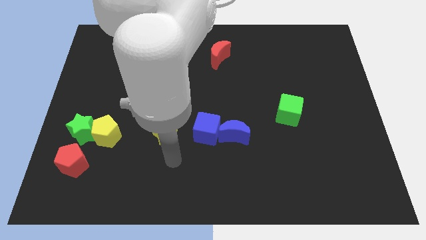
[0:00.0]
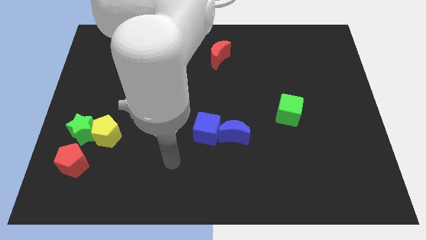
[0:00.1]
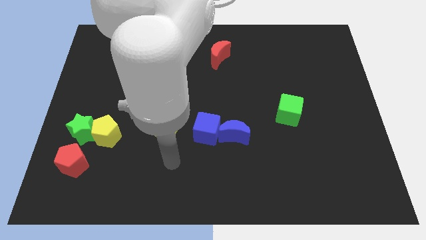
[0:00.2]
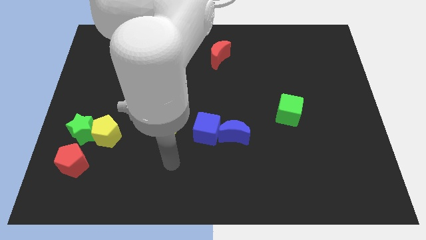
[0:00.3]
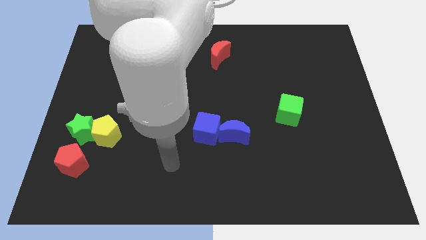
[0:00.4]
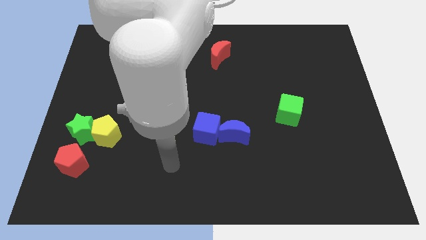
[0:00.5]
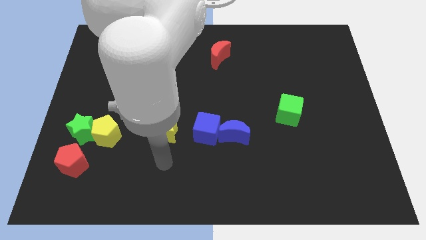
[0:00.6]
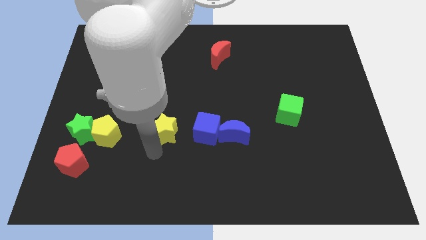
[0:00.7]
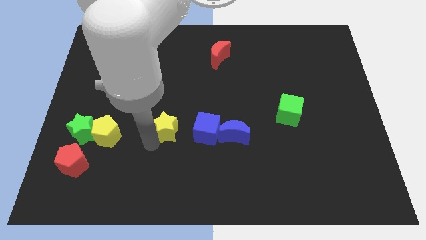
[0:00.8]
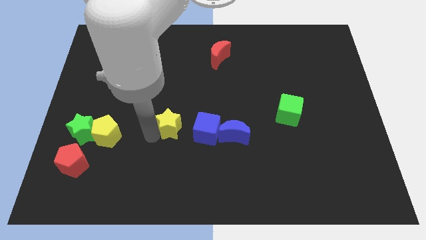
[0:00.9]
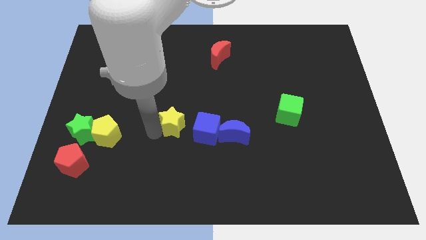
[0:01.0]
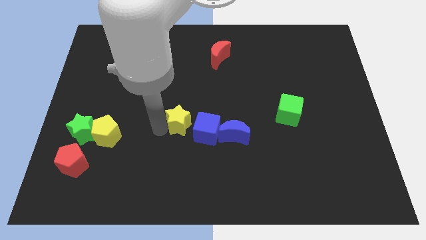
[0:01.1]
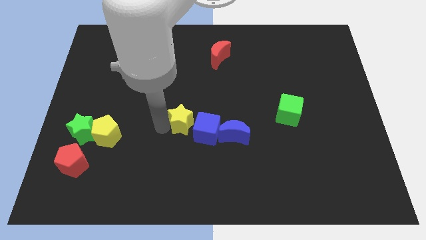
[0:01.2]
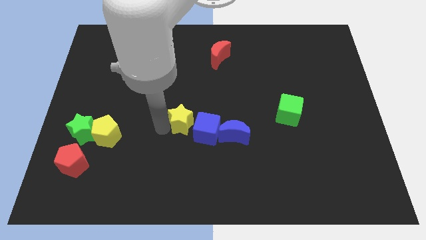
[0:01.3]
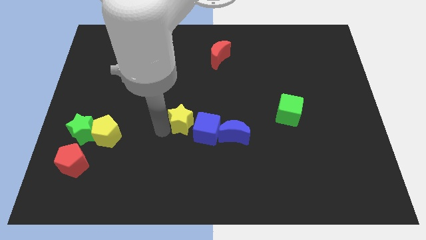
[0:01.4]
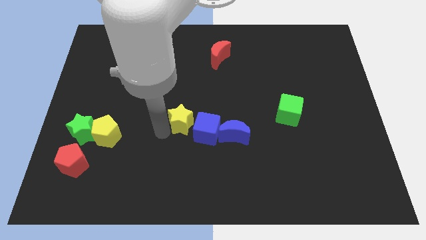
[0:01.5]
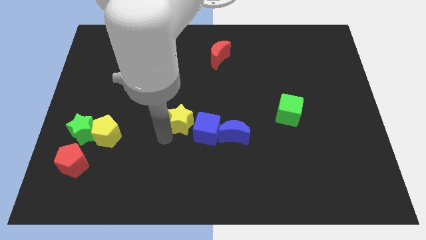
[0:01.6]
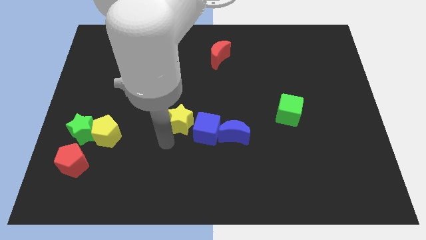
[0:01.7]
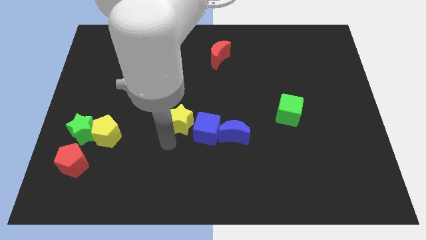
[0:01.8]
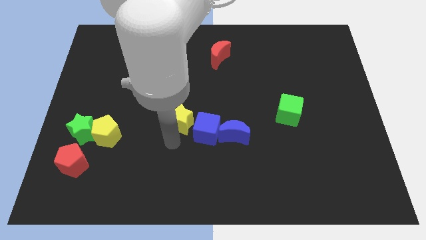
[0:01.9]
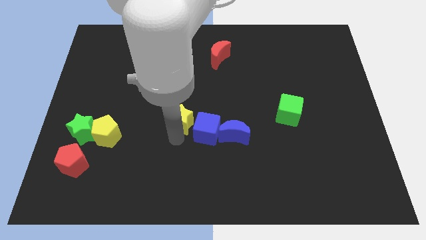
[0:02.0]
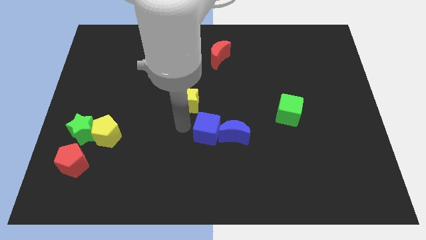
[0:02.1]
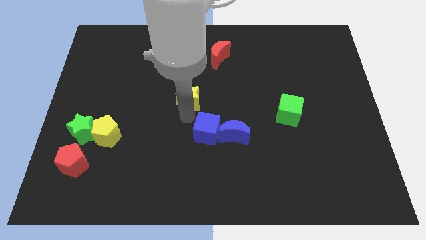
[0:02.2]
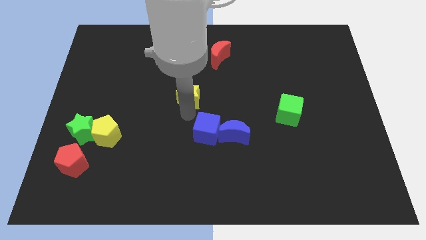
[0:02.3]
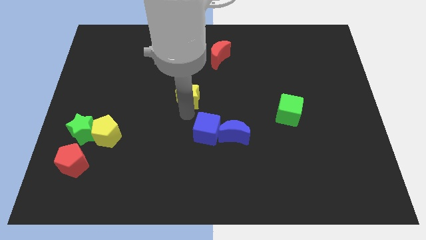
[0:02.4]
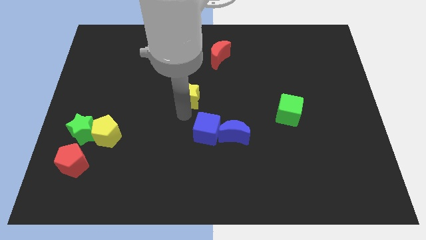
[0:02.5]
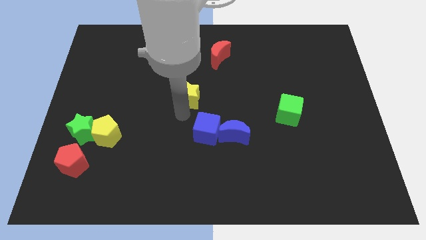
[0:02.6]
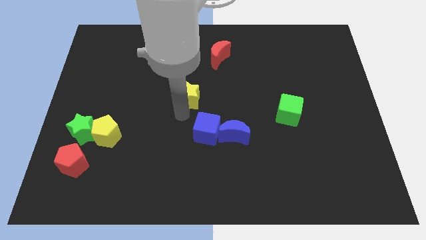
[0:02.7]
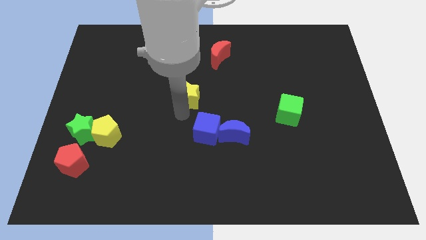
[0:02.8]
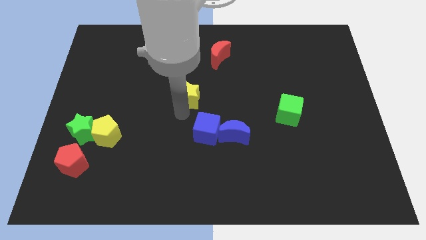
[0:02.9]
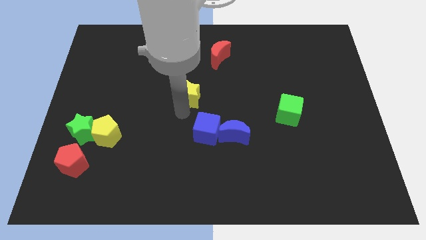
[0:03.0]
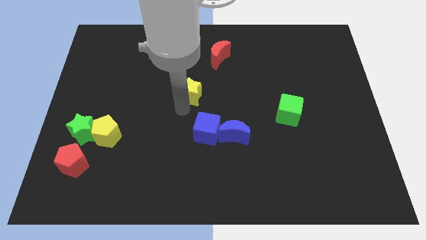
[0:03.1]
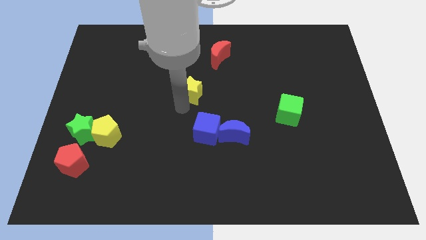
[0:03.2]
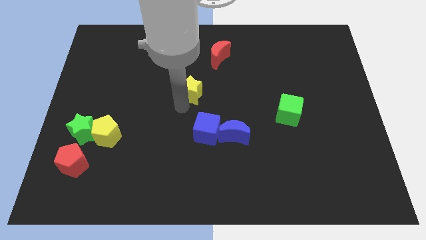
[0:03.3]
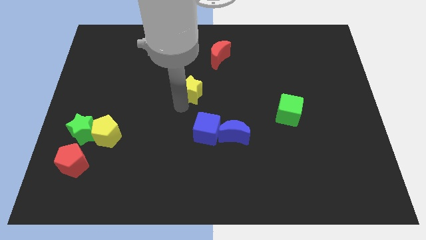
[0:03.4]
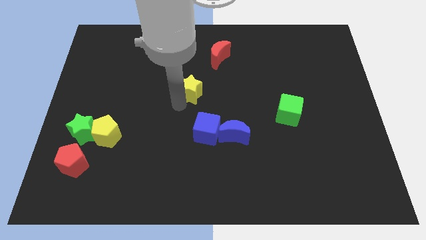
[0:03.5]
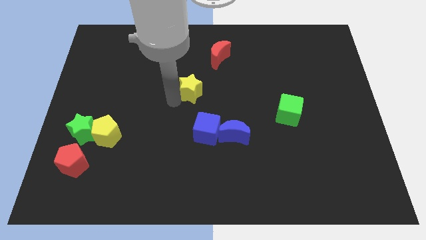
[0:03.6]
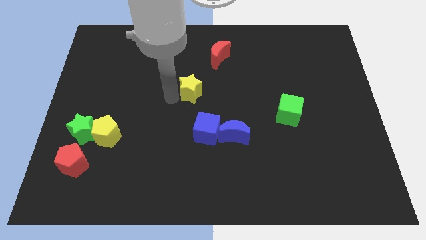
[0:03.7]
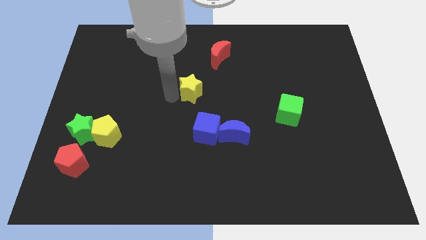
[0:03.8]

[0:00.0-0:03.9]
move the yellow star to the top left of the blue cube

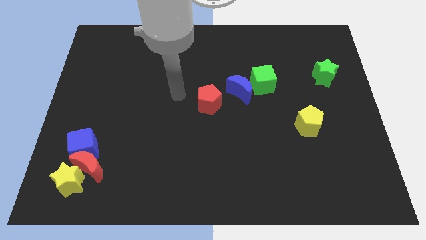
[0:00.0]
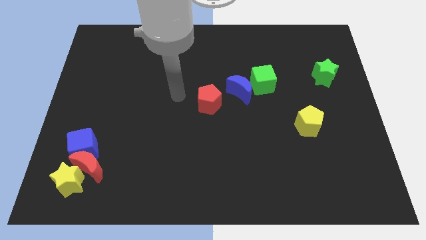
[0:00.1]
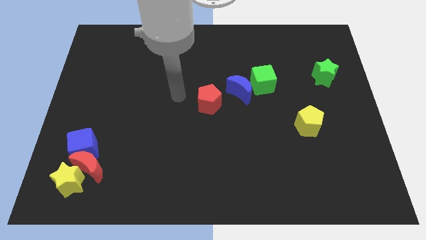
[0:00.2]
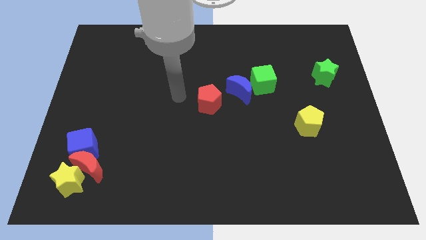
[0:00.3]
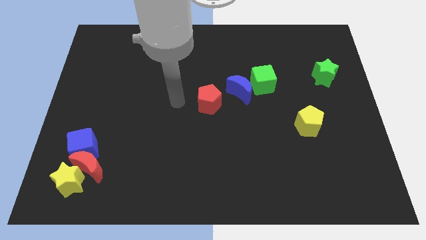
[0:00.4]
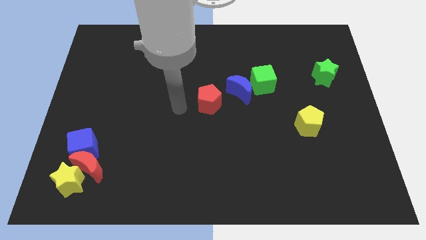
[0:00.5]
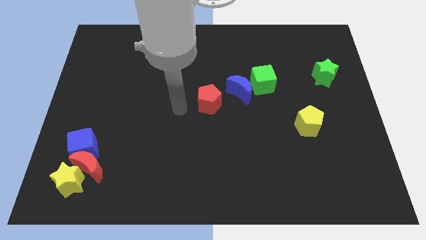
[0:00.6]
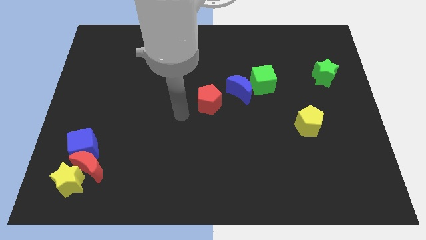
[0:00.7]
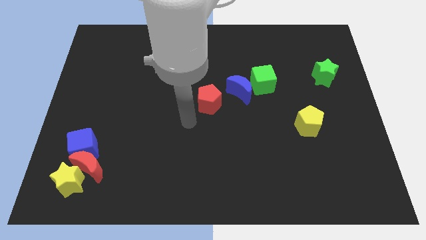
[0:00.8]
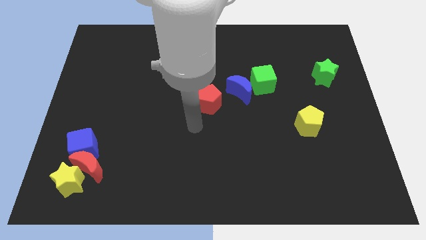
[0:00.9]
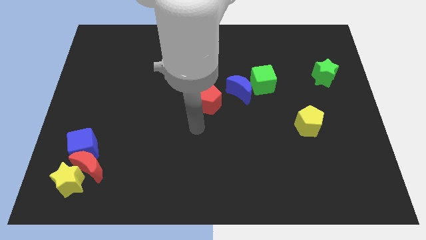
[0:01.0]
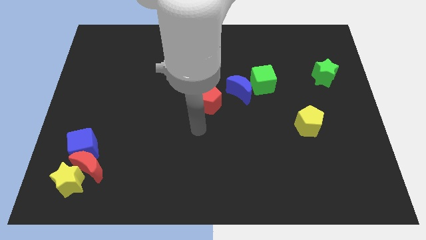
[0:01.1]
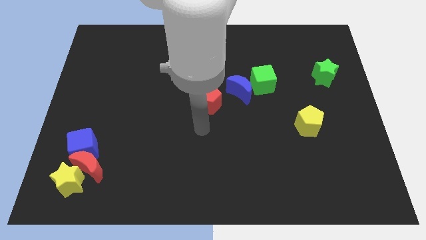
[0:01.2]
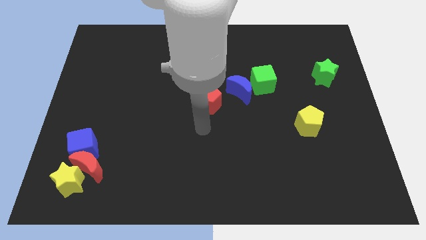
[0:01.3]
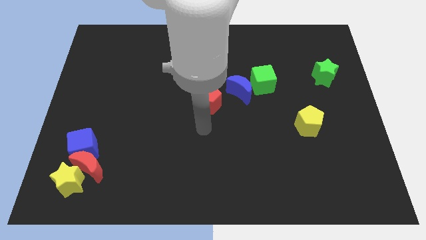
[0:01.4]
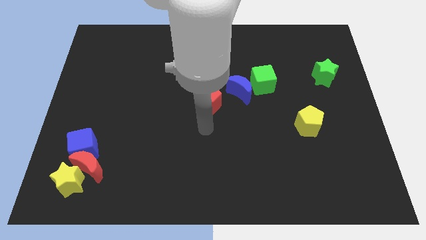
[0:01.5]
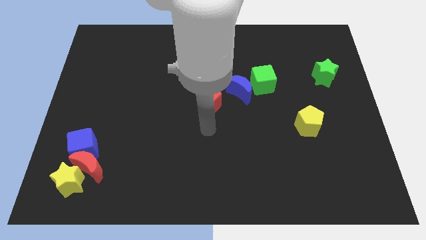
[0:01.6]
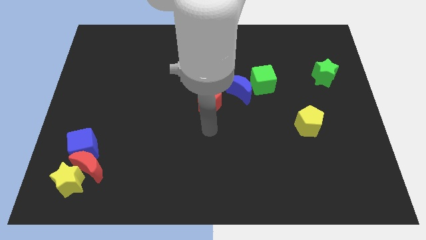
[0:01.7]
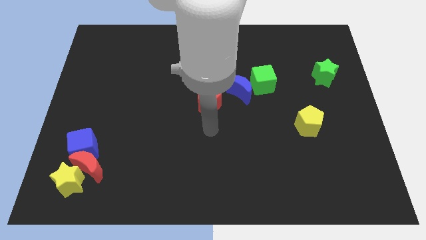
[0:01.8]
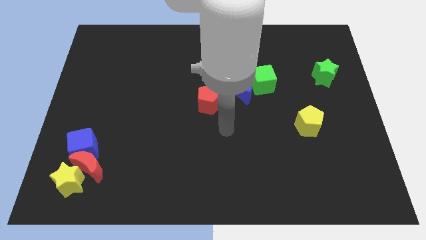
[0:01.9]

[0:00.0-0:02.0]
place your arm at the bottom of the red pentagon

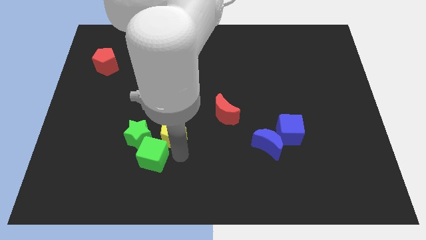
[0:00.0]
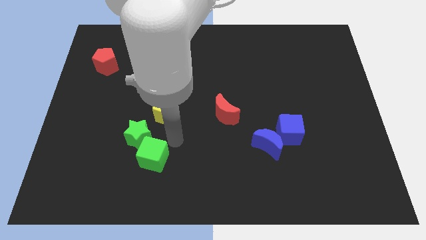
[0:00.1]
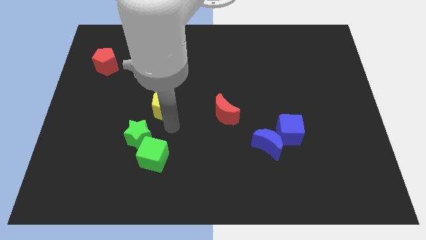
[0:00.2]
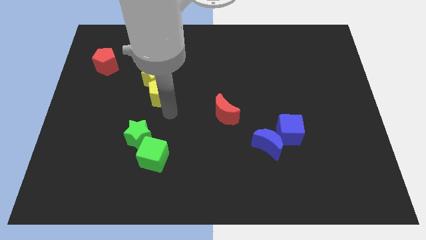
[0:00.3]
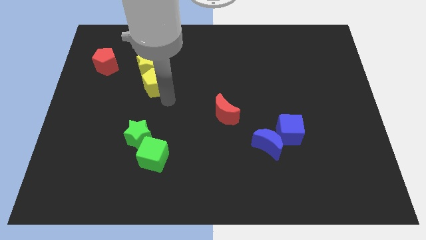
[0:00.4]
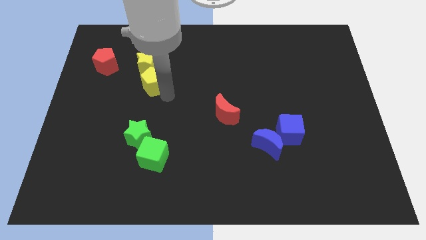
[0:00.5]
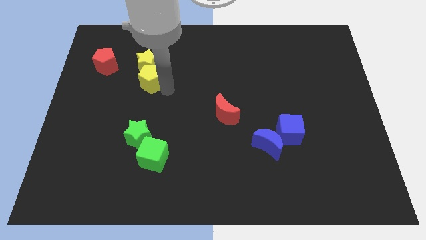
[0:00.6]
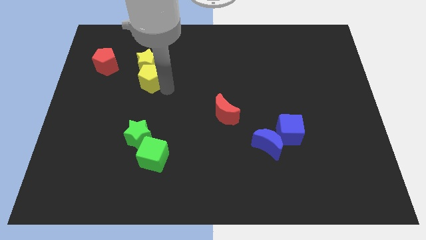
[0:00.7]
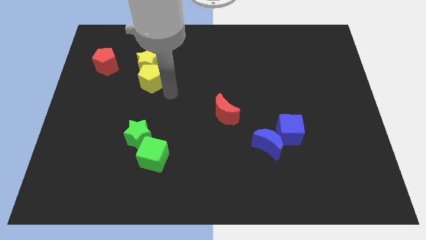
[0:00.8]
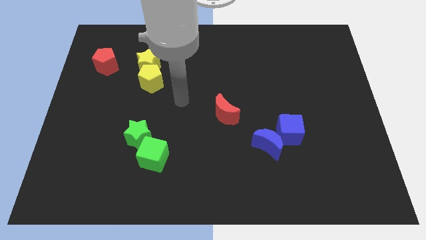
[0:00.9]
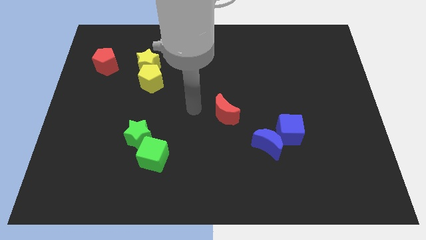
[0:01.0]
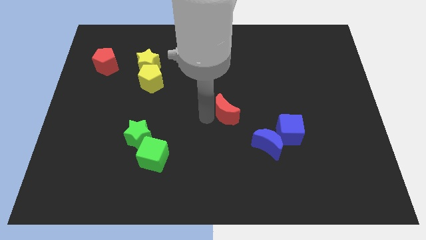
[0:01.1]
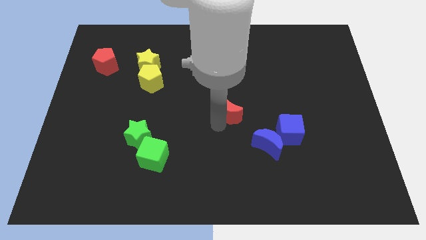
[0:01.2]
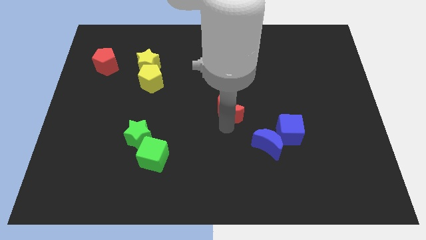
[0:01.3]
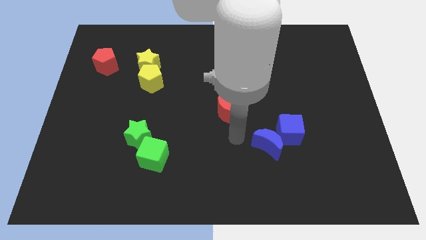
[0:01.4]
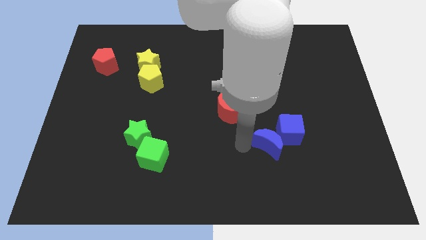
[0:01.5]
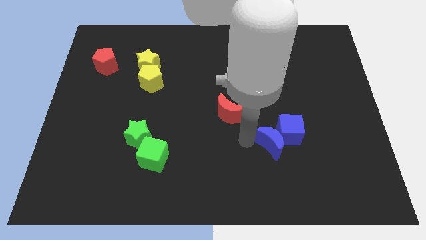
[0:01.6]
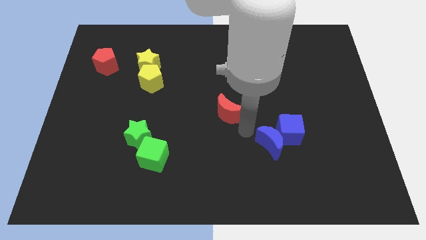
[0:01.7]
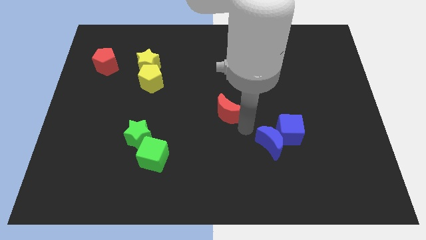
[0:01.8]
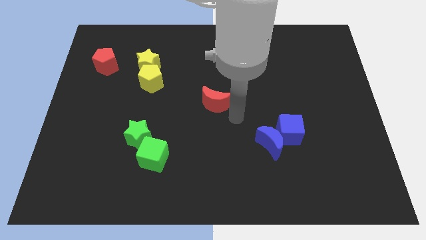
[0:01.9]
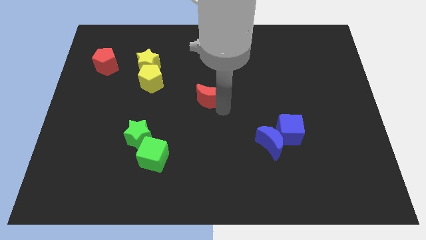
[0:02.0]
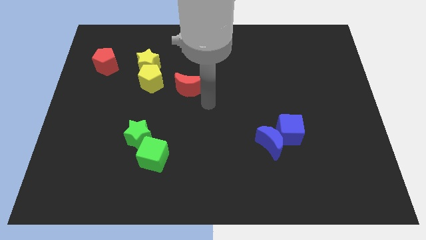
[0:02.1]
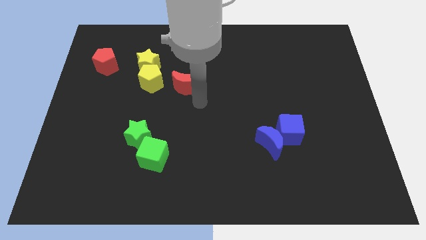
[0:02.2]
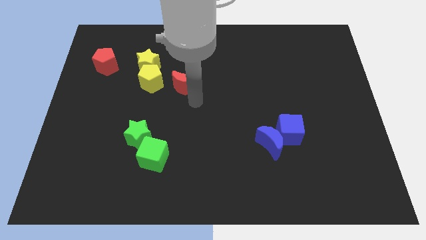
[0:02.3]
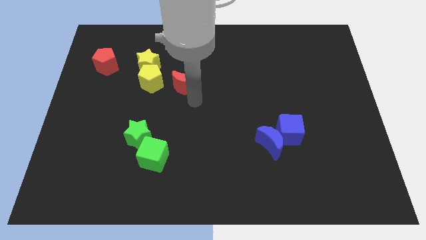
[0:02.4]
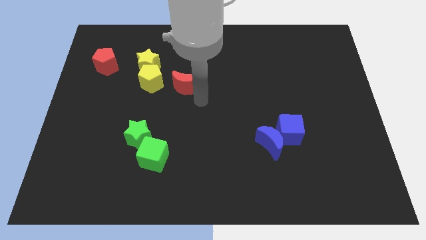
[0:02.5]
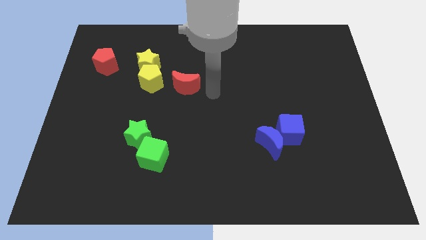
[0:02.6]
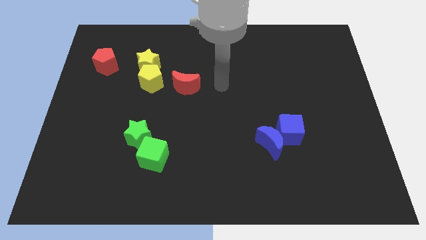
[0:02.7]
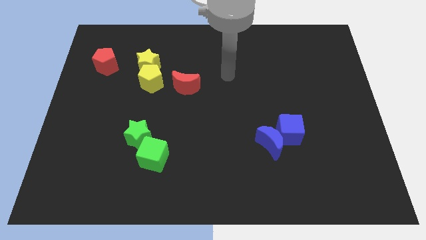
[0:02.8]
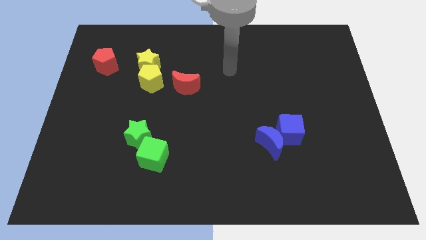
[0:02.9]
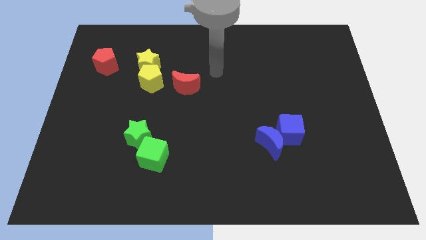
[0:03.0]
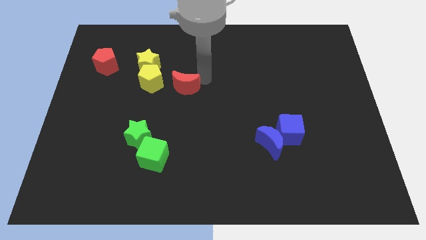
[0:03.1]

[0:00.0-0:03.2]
slide the yellow pentagon and red moon close to yellow star
